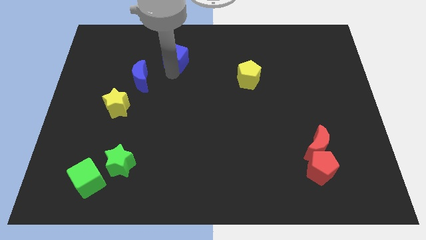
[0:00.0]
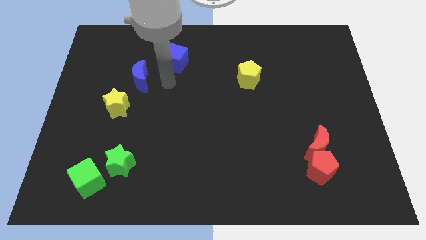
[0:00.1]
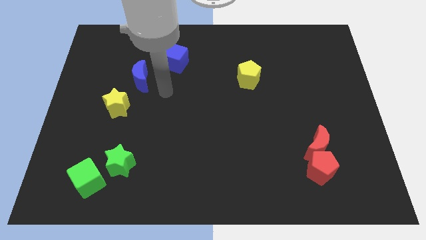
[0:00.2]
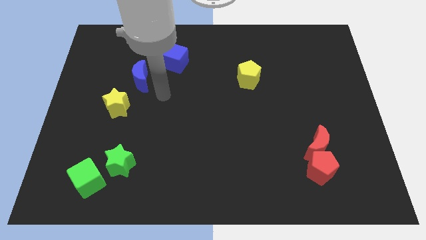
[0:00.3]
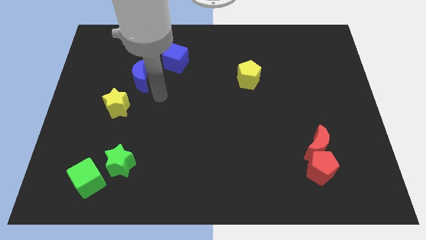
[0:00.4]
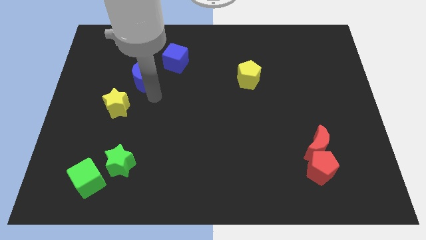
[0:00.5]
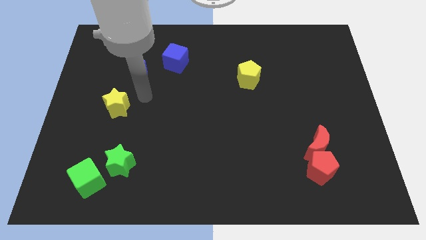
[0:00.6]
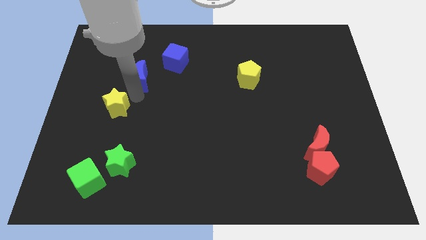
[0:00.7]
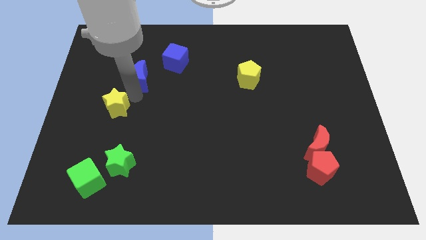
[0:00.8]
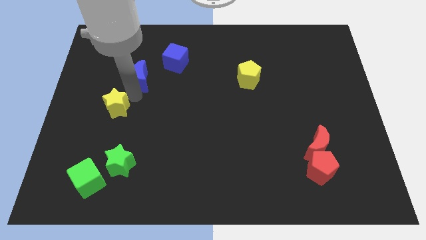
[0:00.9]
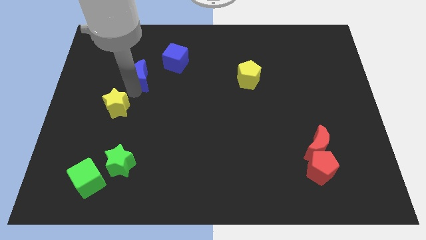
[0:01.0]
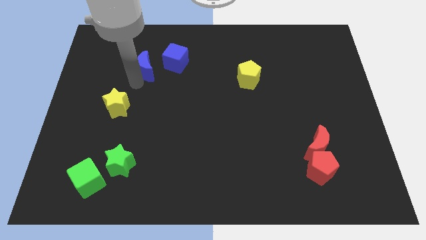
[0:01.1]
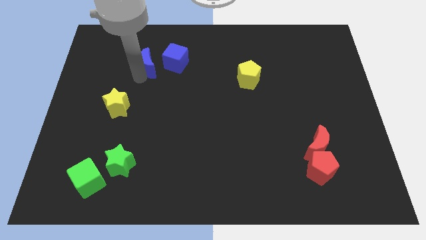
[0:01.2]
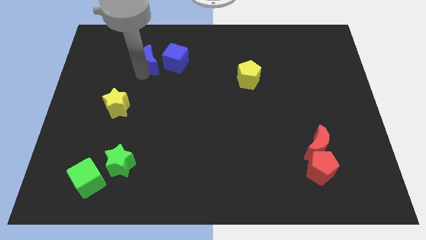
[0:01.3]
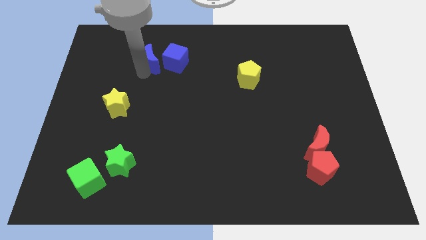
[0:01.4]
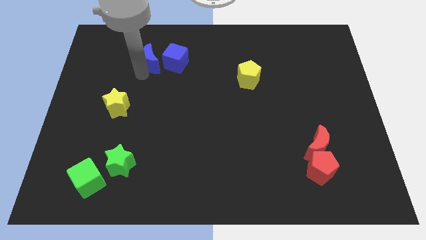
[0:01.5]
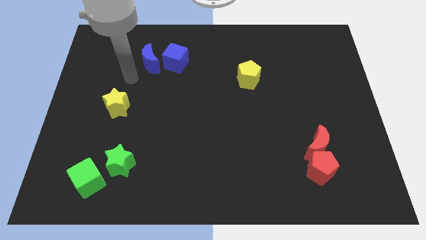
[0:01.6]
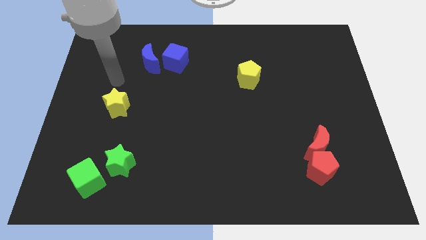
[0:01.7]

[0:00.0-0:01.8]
place the blue crescent to the left of blue cube

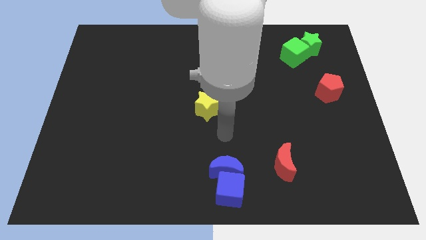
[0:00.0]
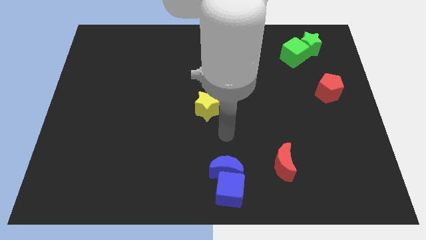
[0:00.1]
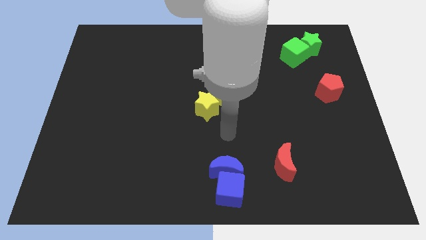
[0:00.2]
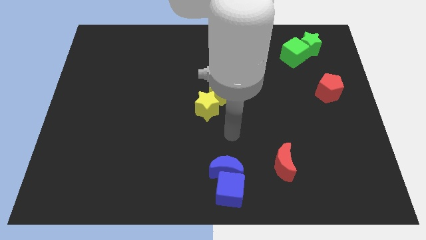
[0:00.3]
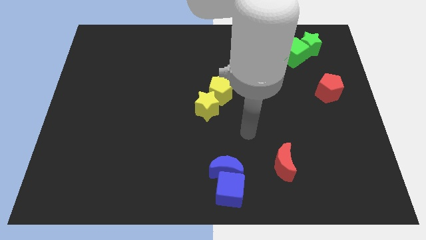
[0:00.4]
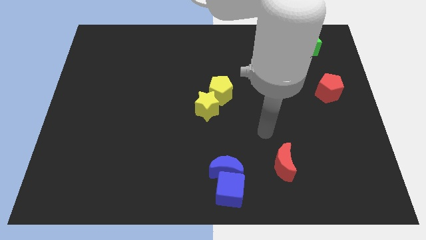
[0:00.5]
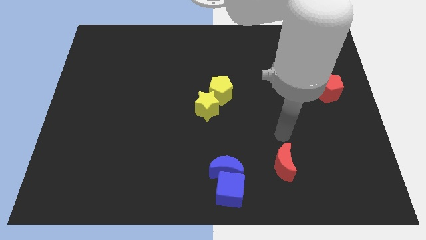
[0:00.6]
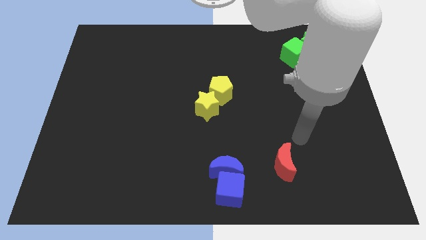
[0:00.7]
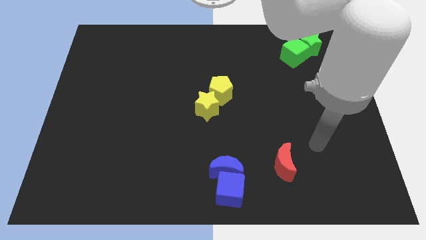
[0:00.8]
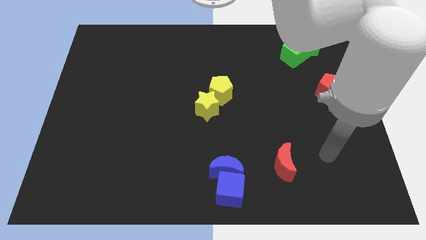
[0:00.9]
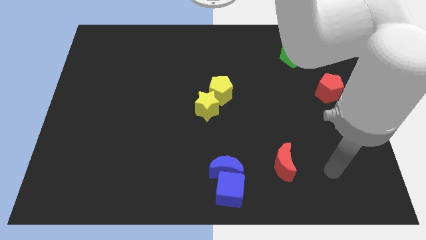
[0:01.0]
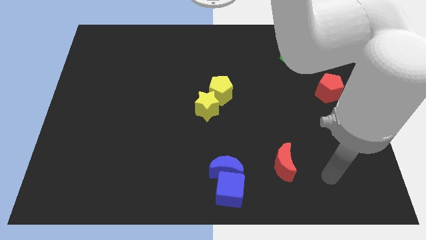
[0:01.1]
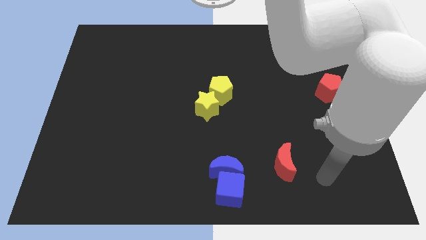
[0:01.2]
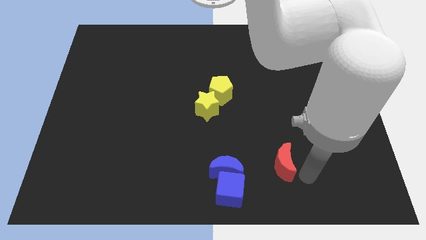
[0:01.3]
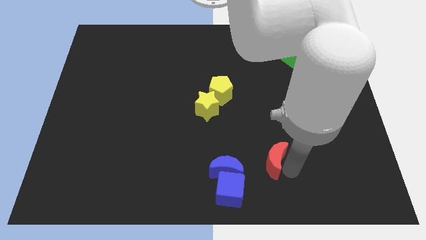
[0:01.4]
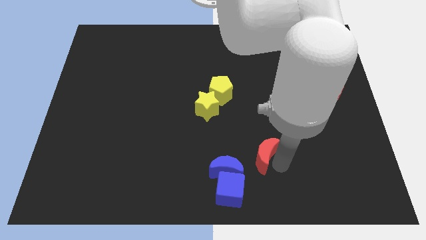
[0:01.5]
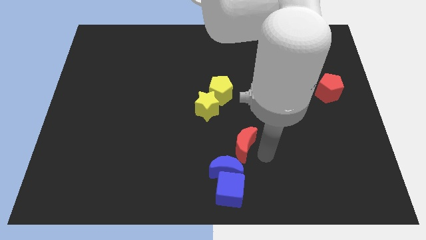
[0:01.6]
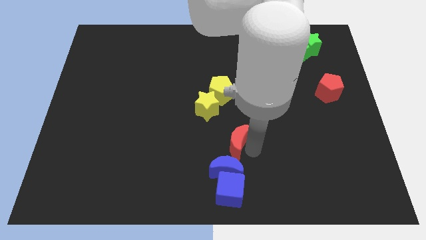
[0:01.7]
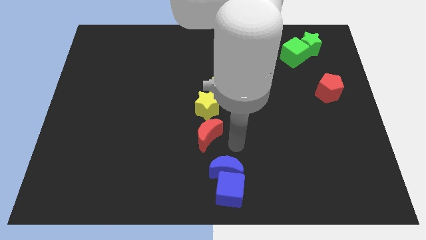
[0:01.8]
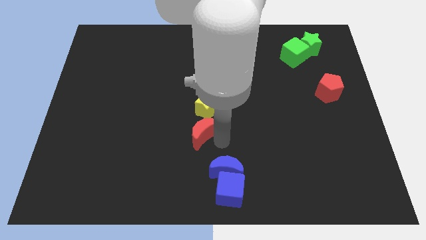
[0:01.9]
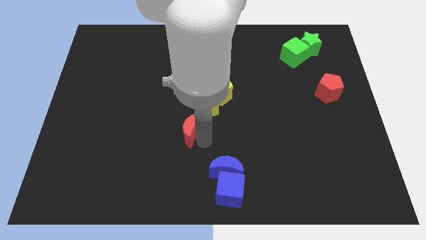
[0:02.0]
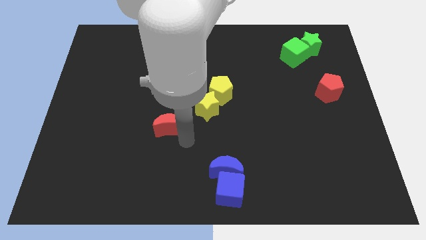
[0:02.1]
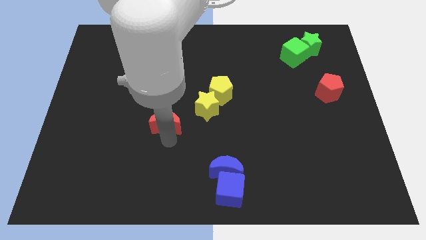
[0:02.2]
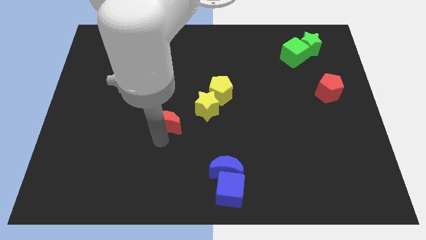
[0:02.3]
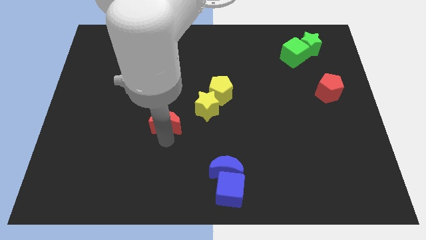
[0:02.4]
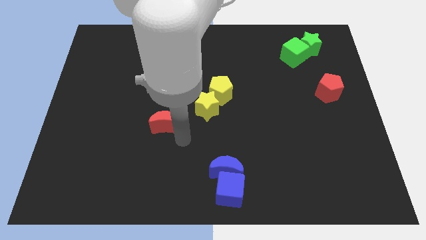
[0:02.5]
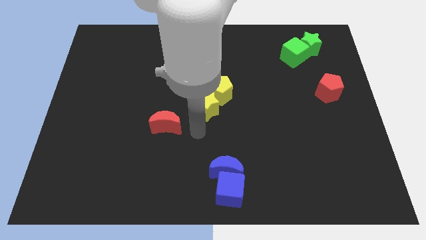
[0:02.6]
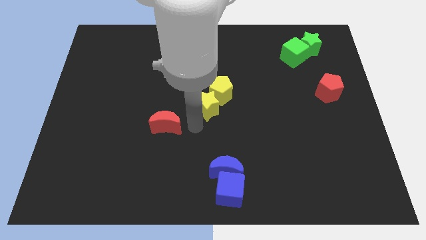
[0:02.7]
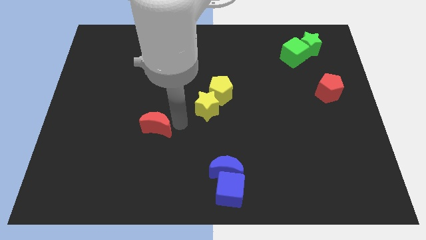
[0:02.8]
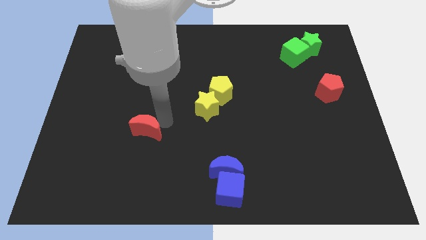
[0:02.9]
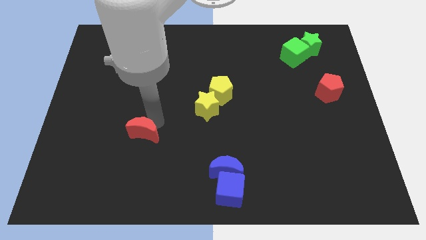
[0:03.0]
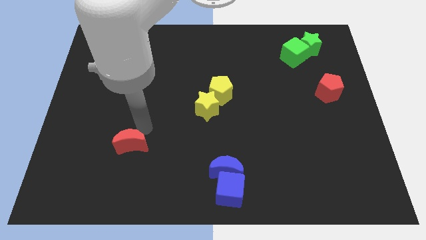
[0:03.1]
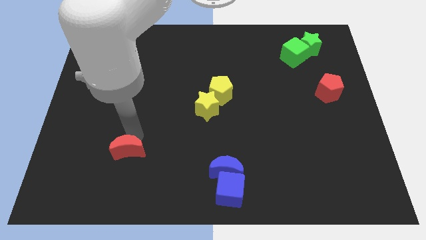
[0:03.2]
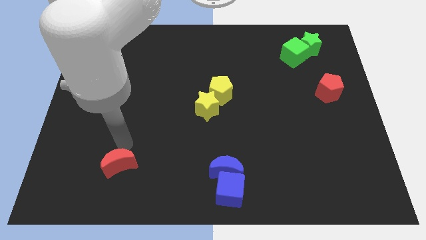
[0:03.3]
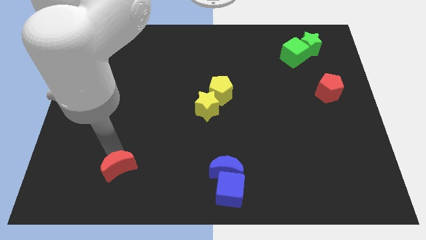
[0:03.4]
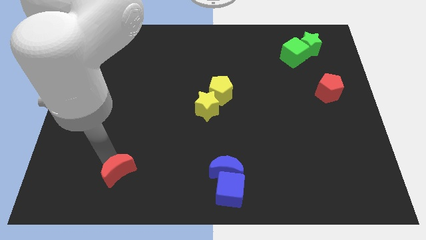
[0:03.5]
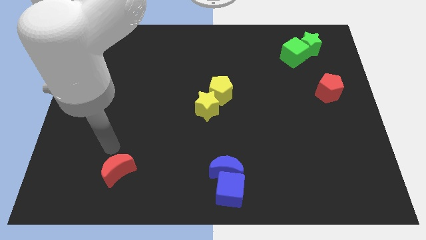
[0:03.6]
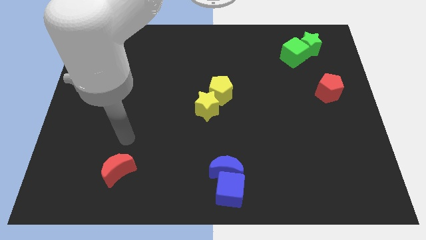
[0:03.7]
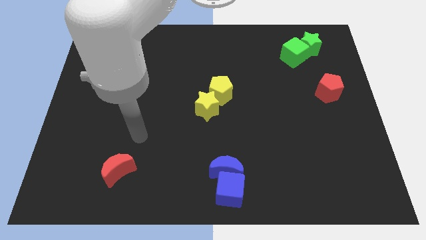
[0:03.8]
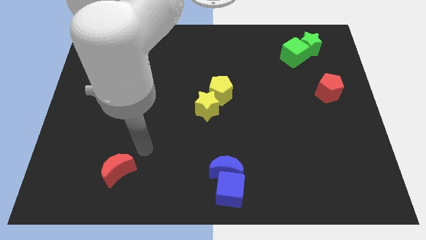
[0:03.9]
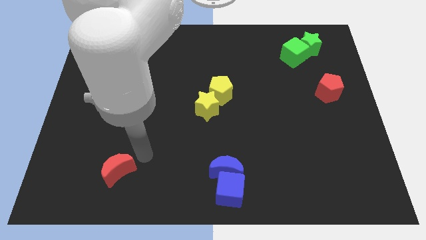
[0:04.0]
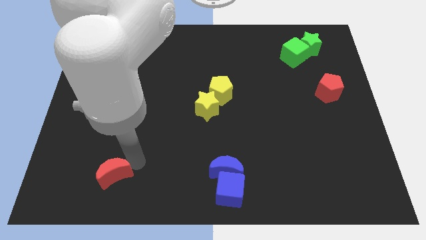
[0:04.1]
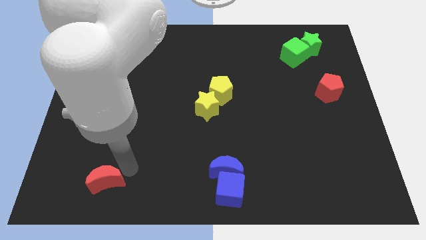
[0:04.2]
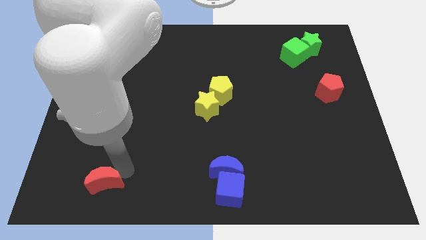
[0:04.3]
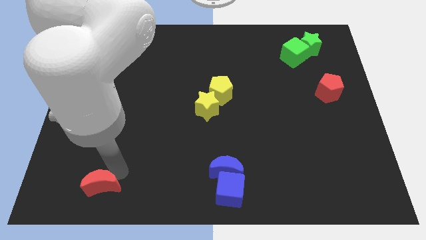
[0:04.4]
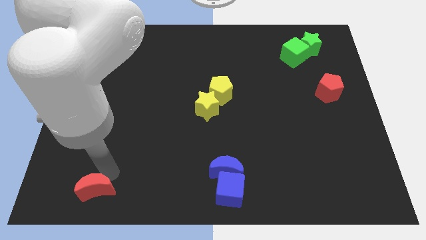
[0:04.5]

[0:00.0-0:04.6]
move the red crescent to the bottom left of the board

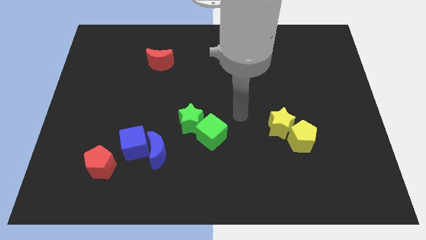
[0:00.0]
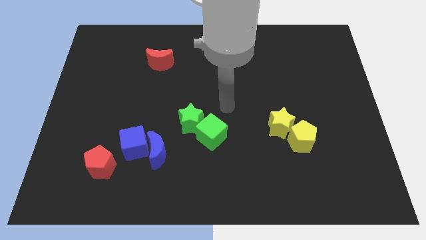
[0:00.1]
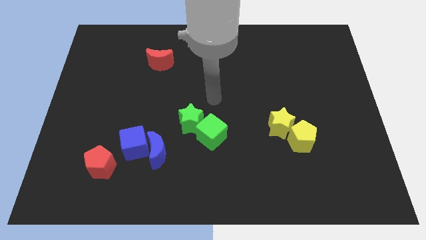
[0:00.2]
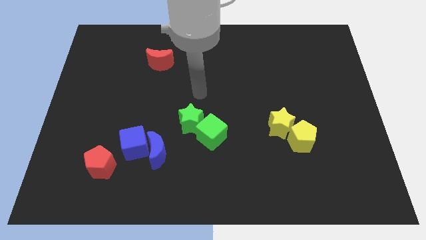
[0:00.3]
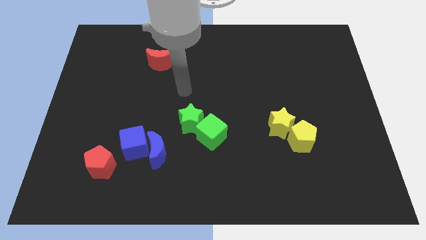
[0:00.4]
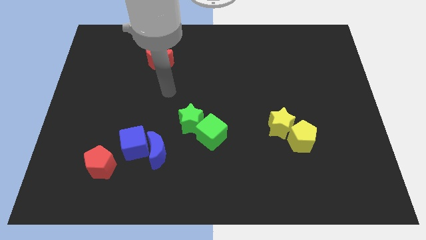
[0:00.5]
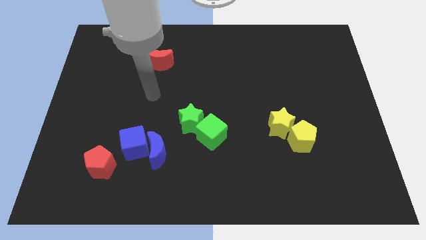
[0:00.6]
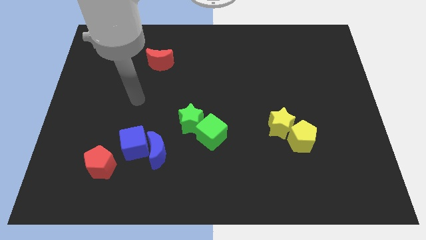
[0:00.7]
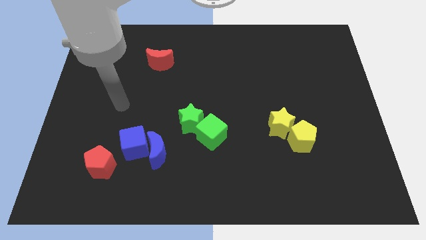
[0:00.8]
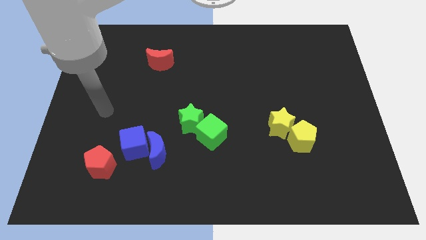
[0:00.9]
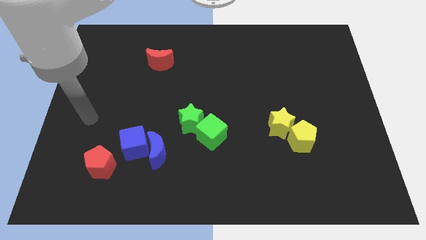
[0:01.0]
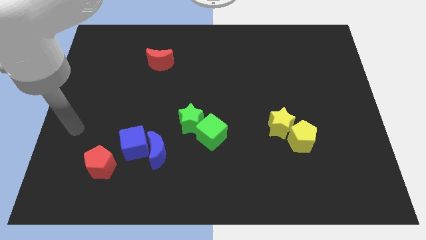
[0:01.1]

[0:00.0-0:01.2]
move the arm away from the yellow blocks

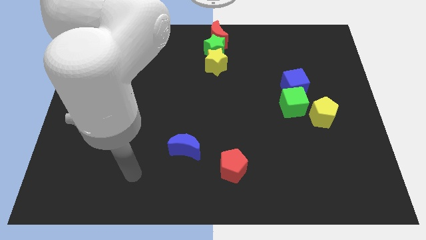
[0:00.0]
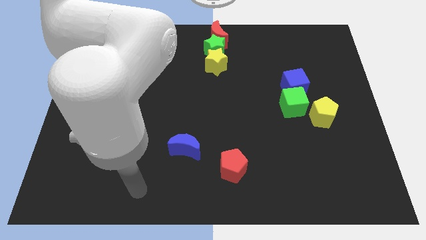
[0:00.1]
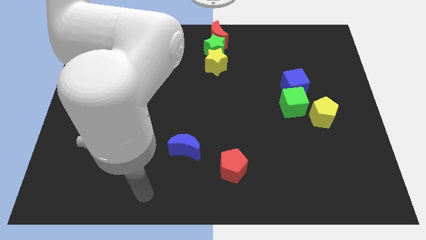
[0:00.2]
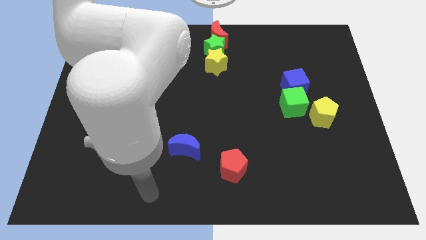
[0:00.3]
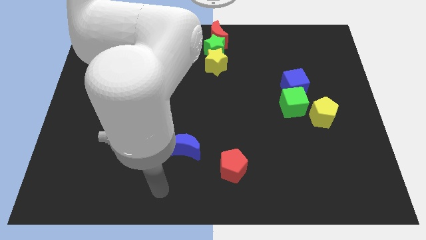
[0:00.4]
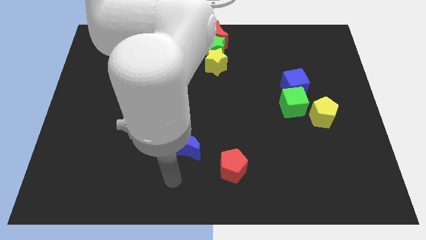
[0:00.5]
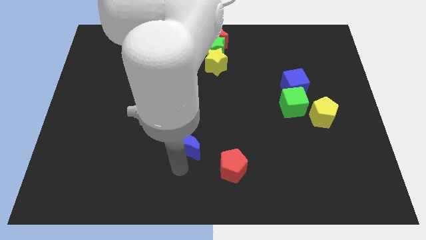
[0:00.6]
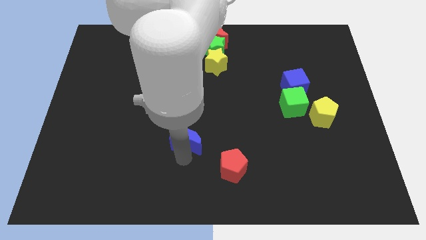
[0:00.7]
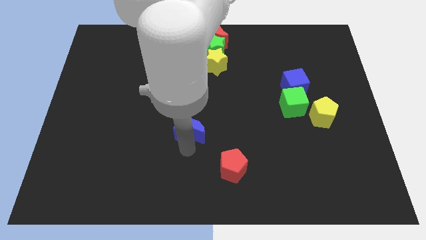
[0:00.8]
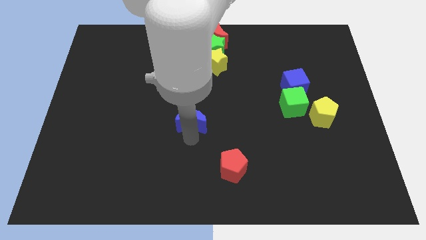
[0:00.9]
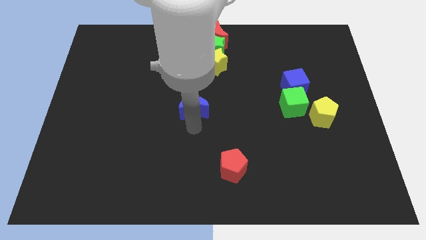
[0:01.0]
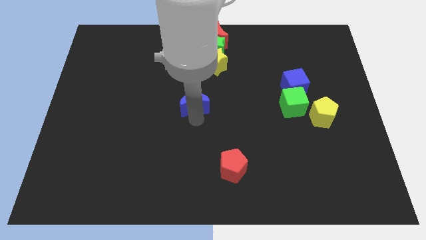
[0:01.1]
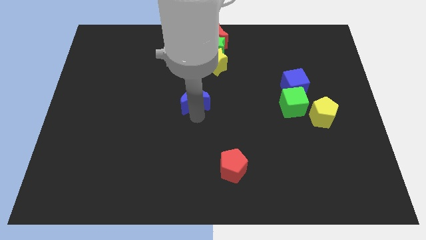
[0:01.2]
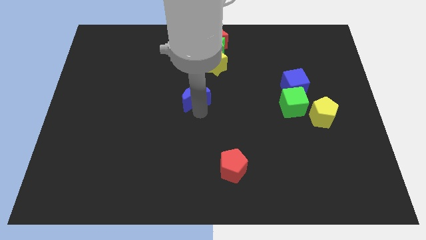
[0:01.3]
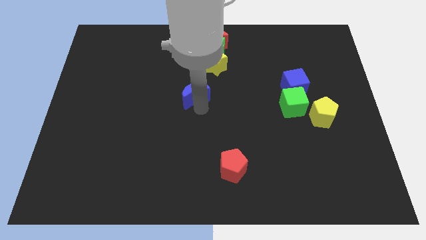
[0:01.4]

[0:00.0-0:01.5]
move blue crescent to center
